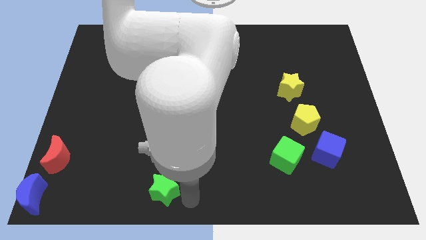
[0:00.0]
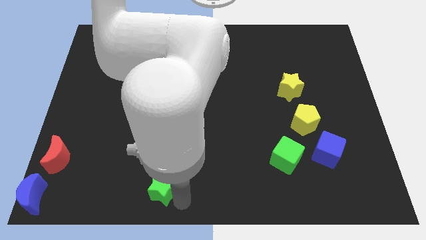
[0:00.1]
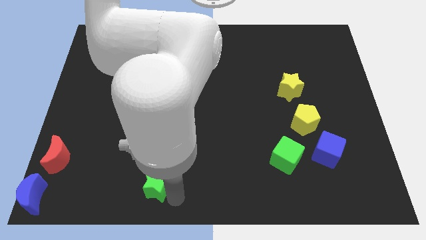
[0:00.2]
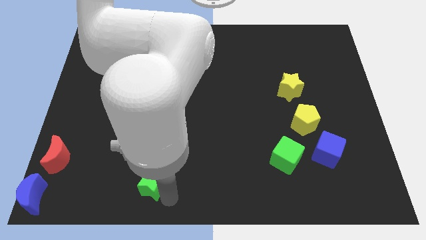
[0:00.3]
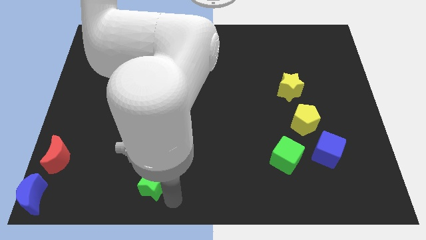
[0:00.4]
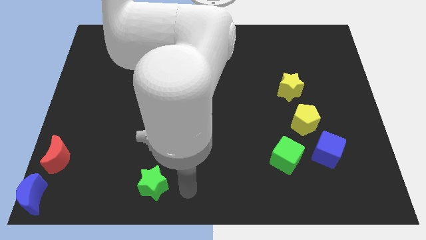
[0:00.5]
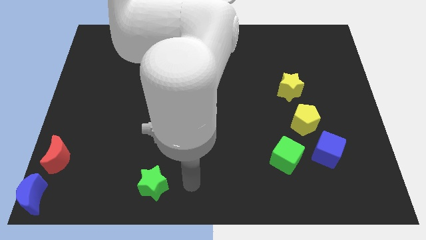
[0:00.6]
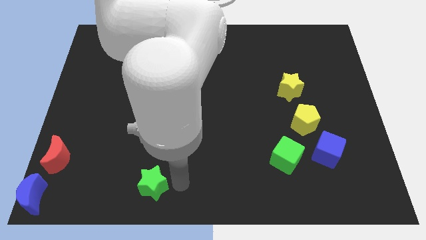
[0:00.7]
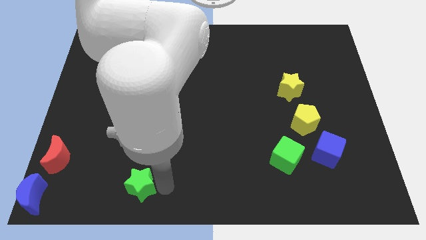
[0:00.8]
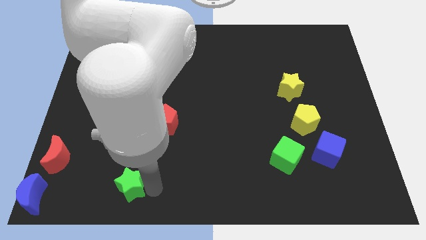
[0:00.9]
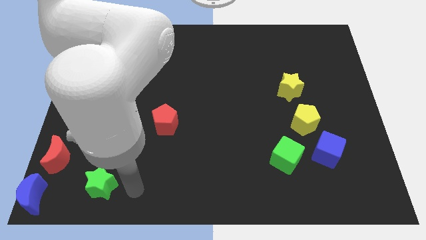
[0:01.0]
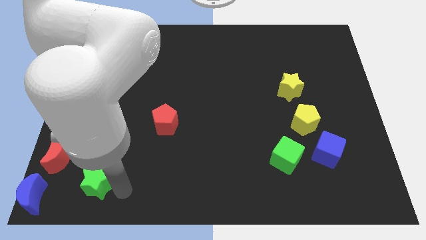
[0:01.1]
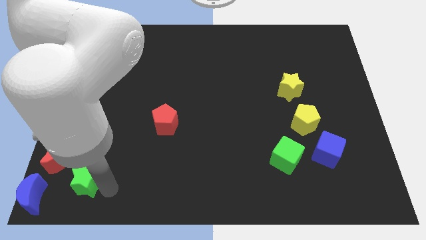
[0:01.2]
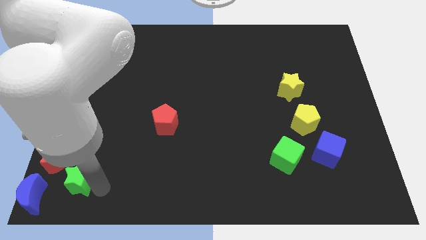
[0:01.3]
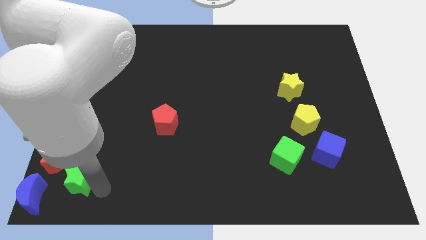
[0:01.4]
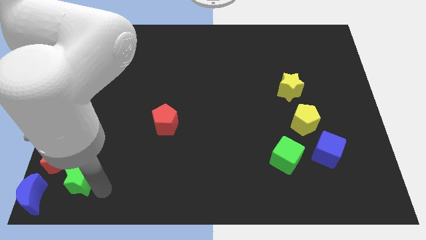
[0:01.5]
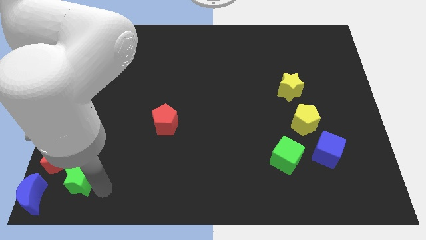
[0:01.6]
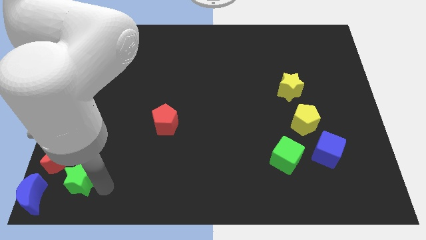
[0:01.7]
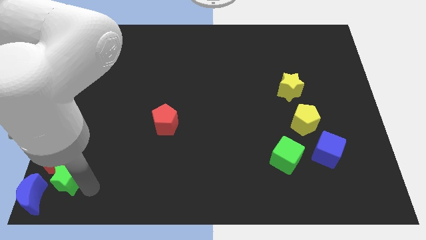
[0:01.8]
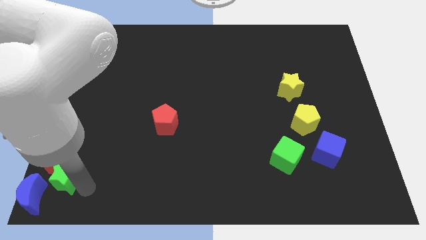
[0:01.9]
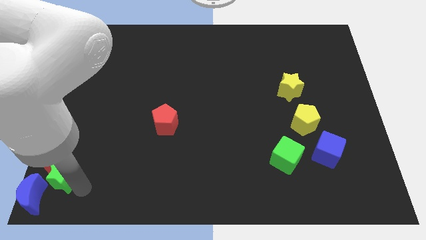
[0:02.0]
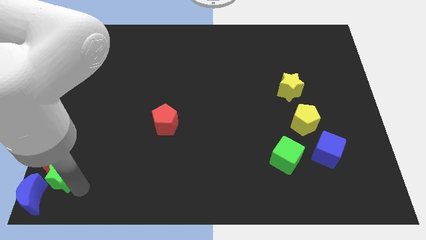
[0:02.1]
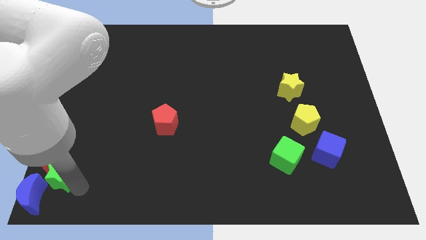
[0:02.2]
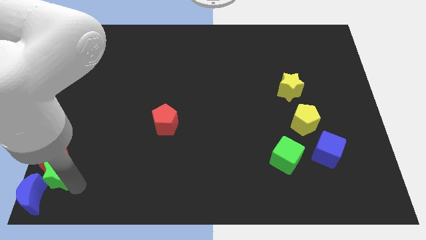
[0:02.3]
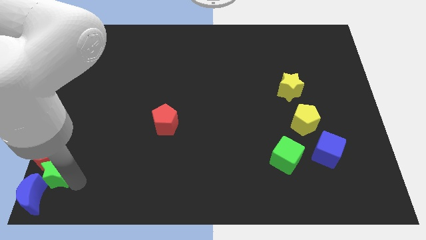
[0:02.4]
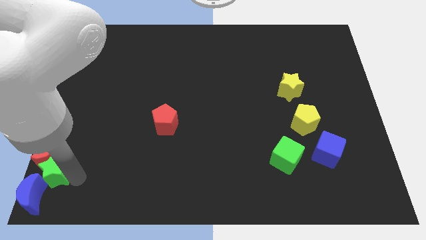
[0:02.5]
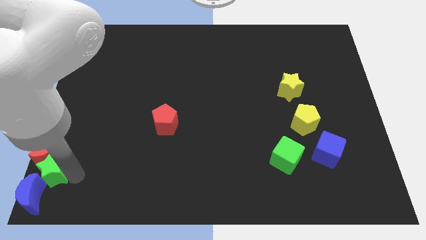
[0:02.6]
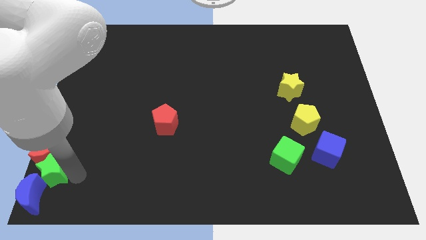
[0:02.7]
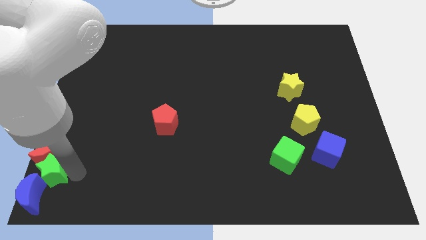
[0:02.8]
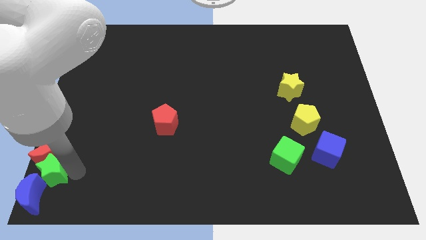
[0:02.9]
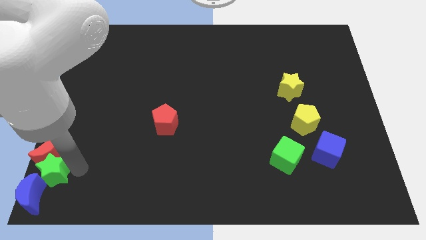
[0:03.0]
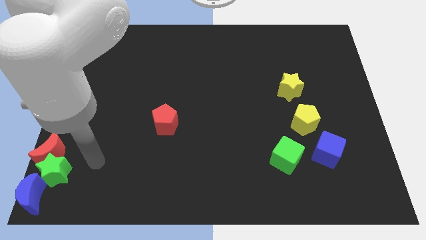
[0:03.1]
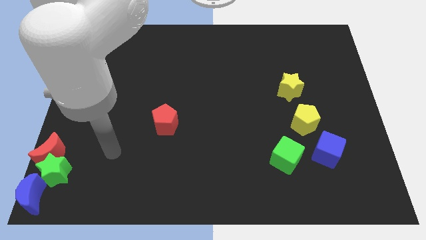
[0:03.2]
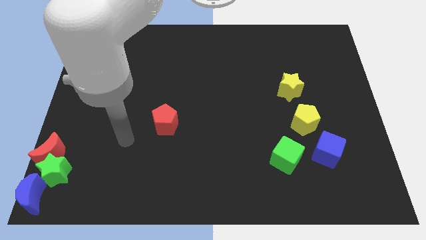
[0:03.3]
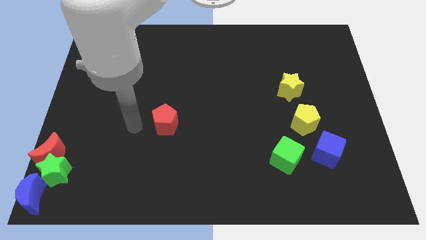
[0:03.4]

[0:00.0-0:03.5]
slide the green star into the red crescent

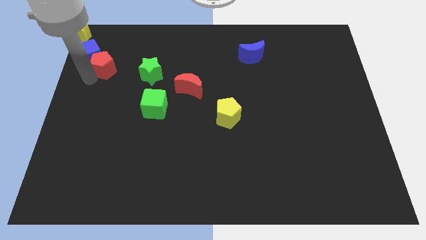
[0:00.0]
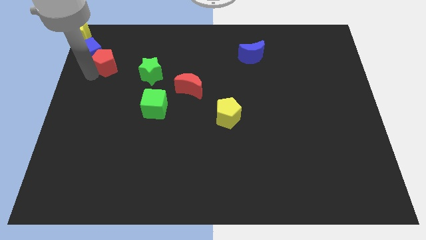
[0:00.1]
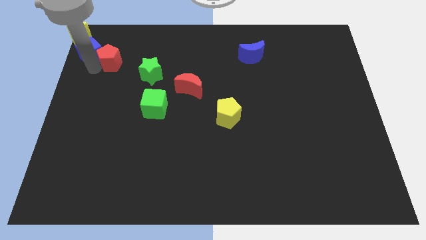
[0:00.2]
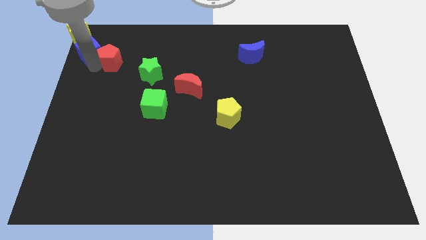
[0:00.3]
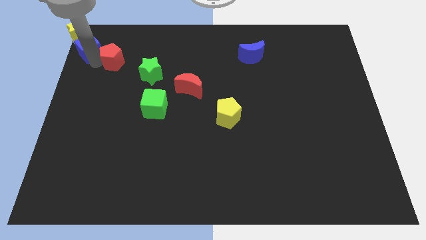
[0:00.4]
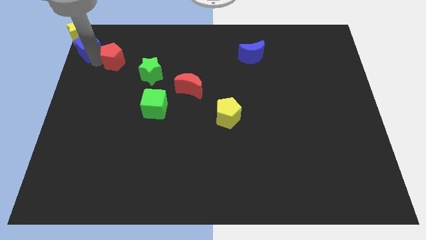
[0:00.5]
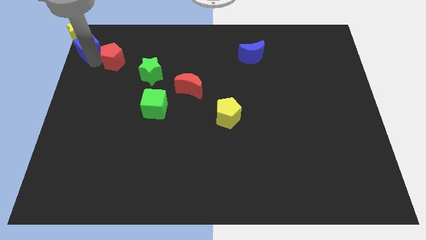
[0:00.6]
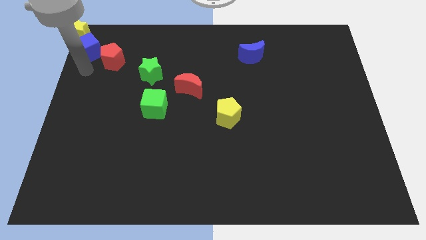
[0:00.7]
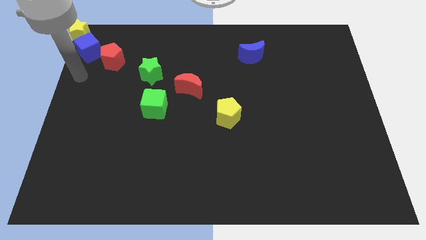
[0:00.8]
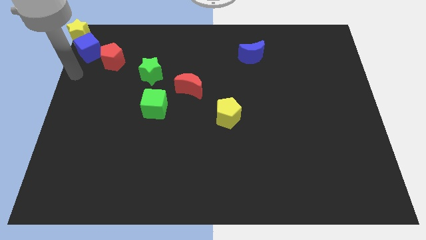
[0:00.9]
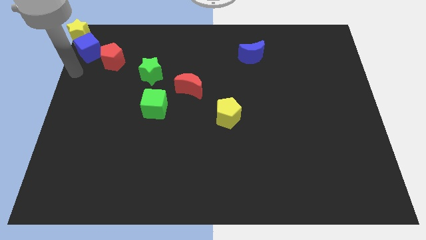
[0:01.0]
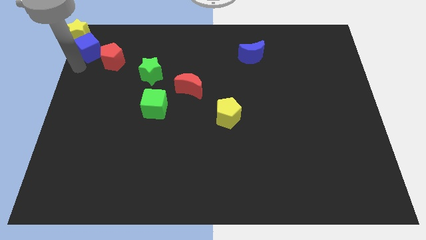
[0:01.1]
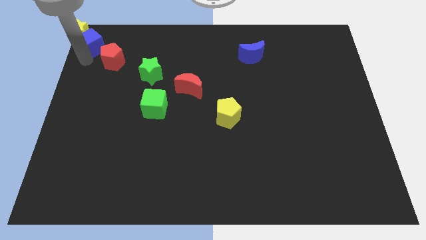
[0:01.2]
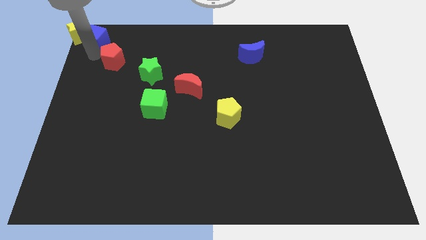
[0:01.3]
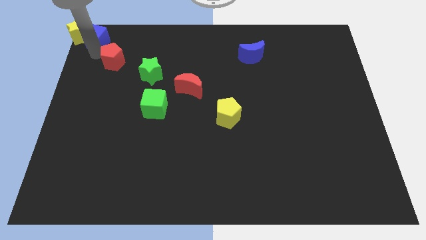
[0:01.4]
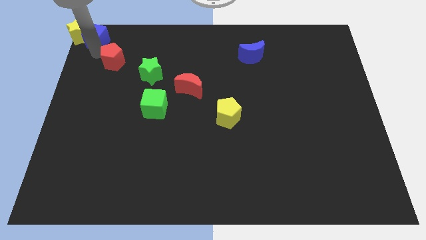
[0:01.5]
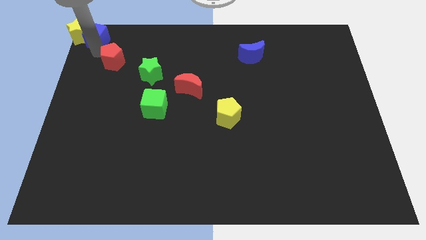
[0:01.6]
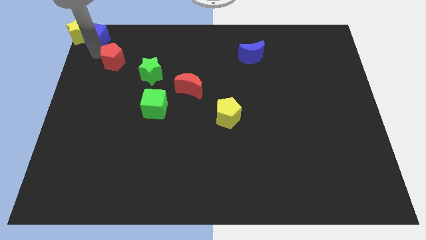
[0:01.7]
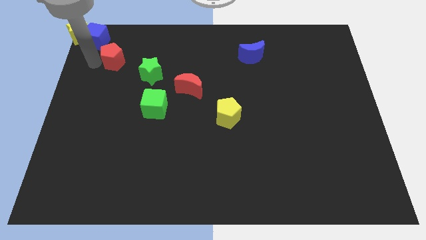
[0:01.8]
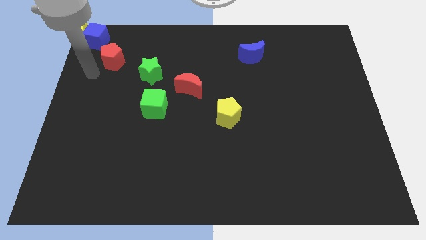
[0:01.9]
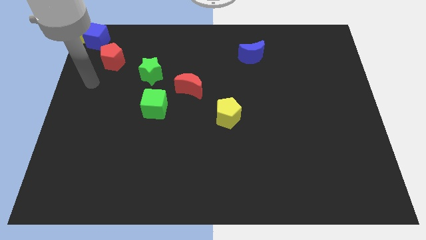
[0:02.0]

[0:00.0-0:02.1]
push the blue cube to the right of the yellow star

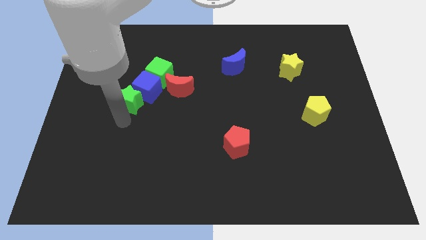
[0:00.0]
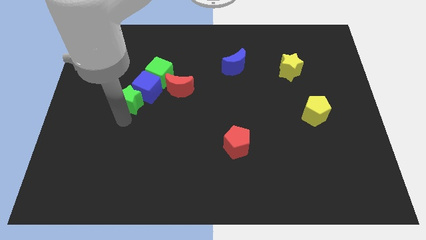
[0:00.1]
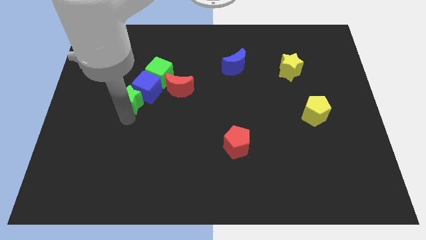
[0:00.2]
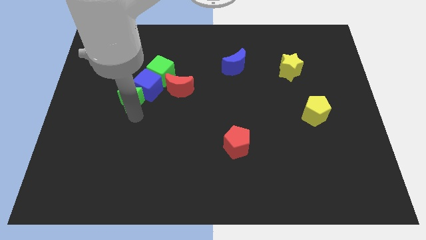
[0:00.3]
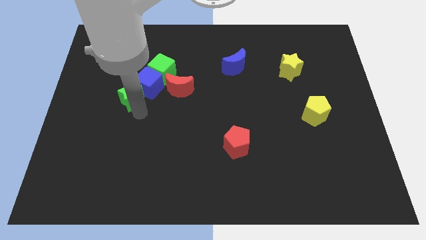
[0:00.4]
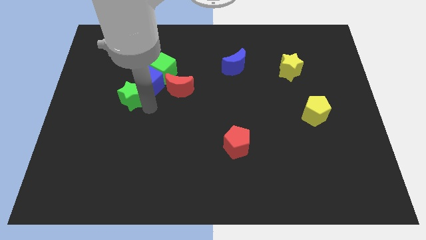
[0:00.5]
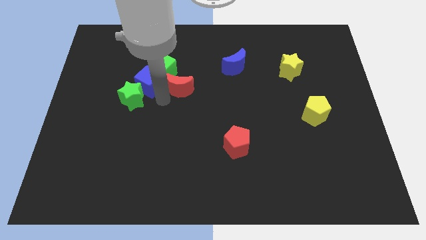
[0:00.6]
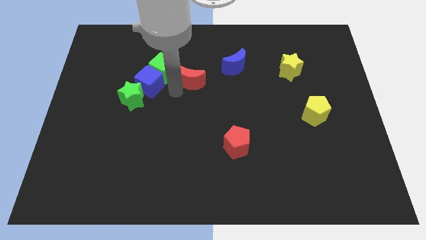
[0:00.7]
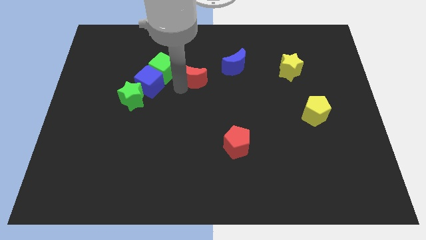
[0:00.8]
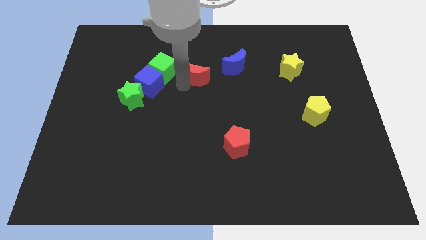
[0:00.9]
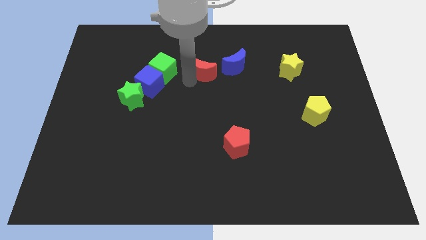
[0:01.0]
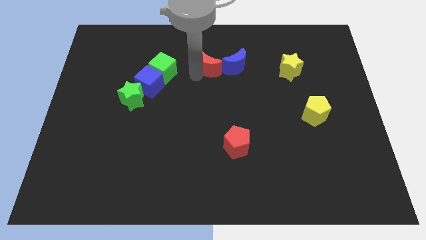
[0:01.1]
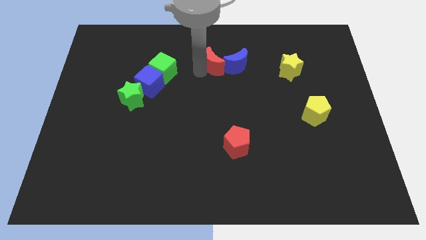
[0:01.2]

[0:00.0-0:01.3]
push the red crescent into the left side of the blue moon

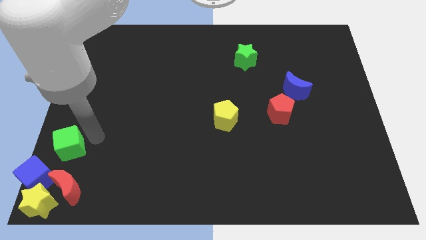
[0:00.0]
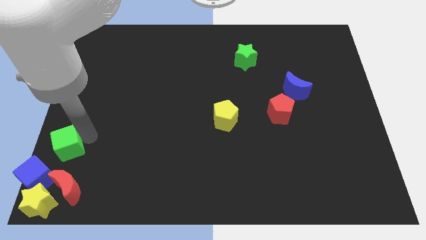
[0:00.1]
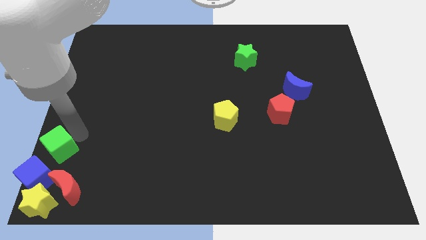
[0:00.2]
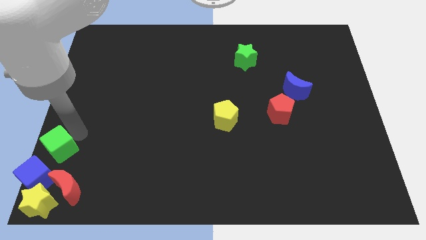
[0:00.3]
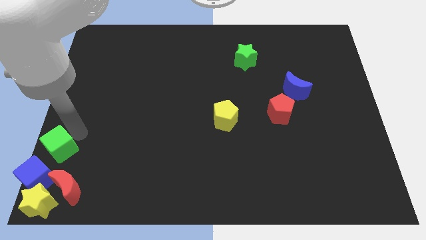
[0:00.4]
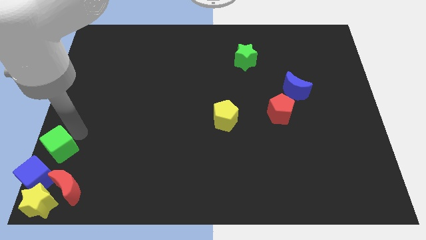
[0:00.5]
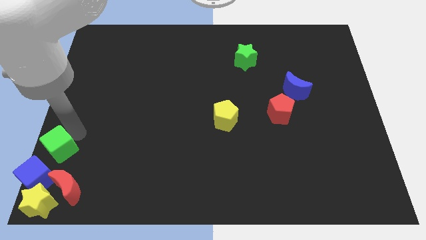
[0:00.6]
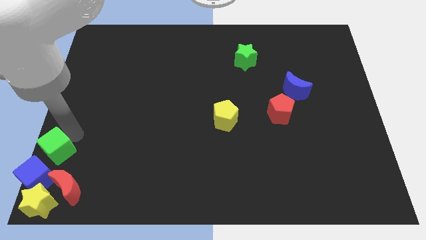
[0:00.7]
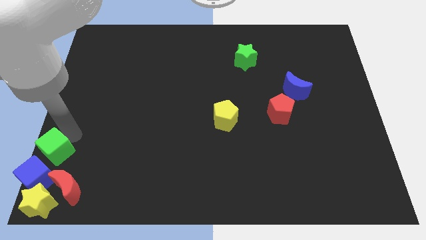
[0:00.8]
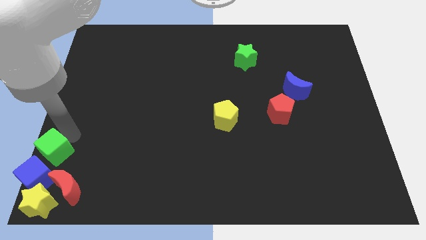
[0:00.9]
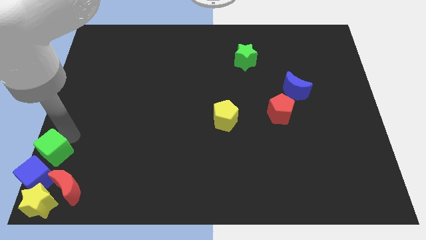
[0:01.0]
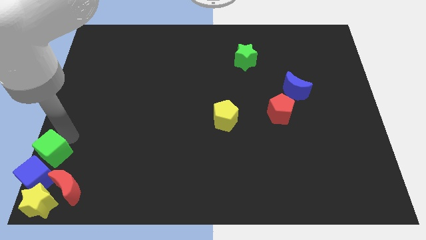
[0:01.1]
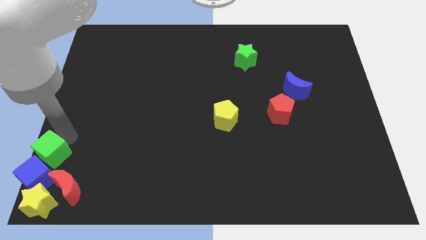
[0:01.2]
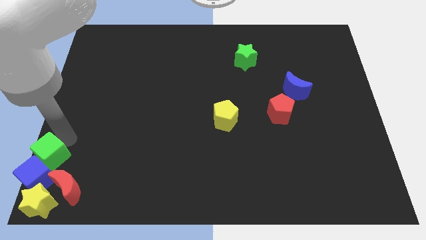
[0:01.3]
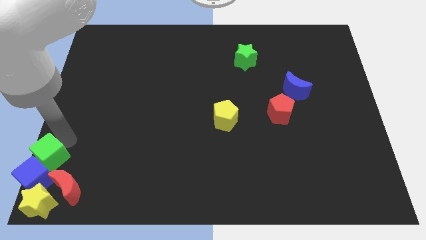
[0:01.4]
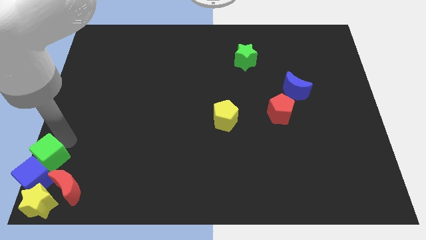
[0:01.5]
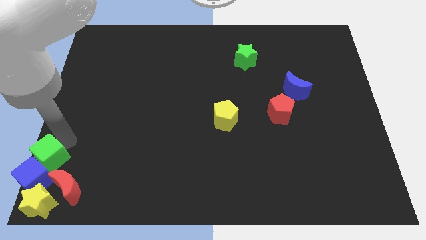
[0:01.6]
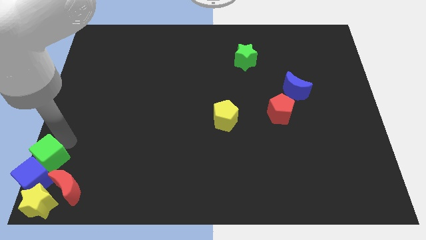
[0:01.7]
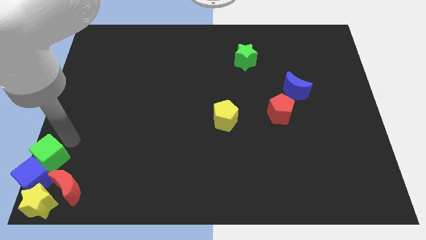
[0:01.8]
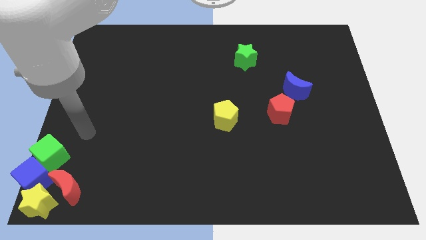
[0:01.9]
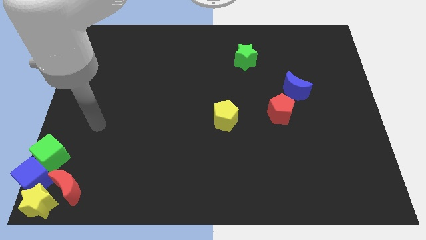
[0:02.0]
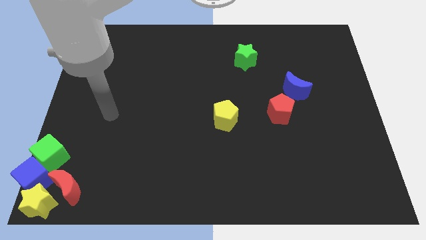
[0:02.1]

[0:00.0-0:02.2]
move the green cube into the blue cube
